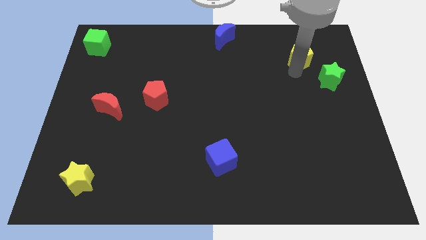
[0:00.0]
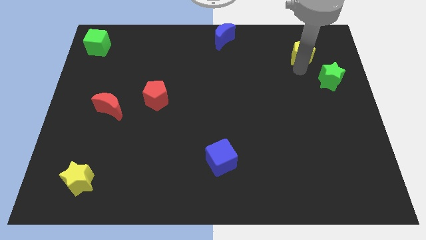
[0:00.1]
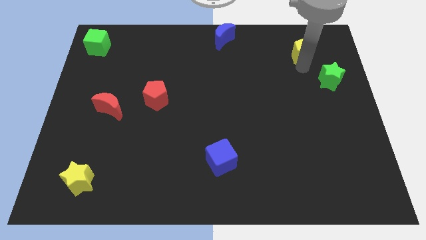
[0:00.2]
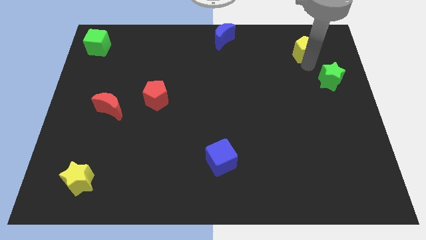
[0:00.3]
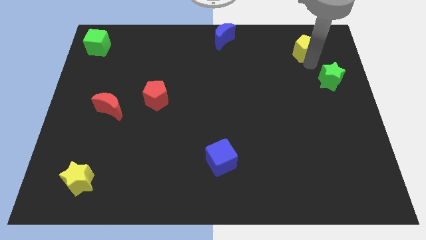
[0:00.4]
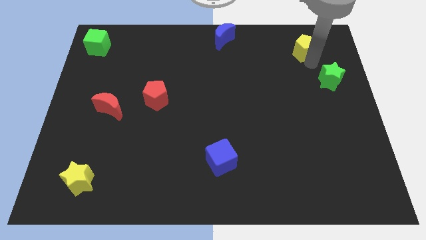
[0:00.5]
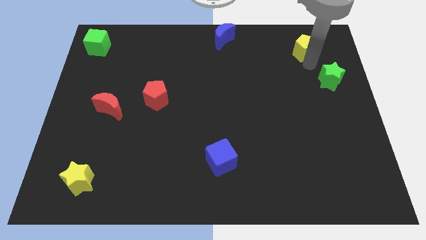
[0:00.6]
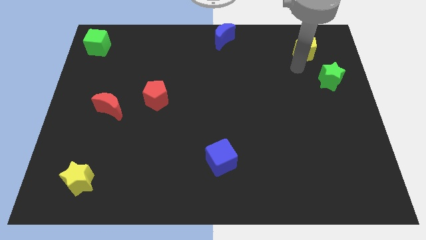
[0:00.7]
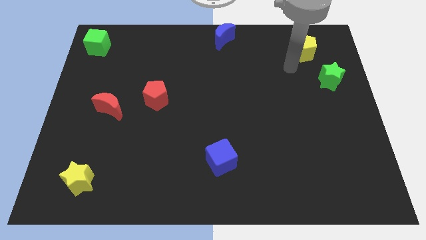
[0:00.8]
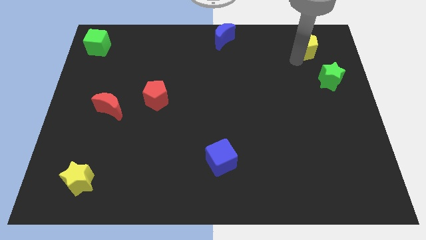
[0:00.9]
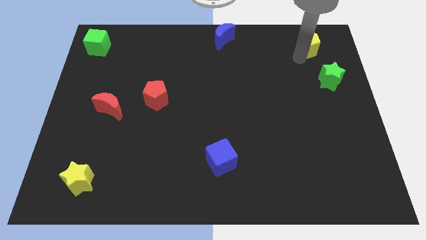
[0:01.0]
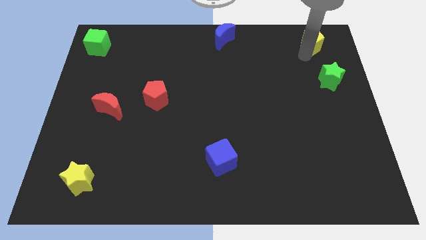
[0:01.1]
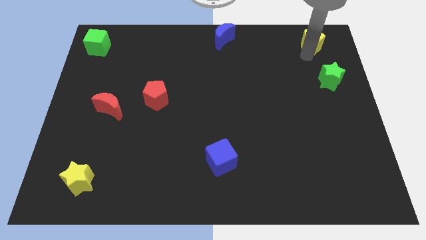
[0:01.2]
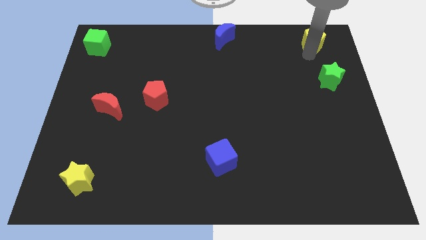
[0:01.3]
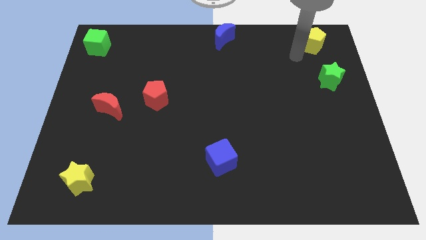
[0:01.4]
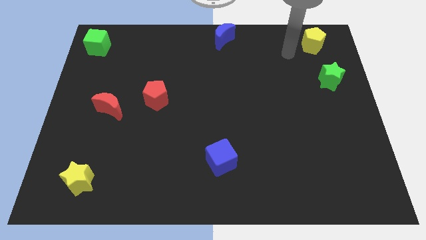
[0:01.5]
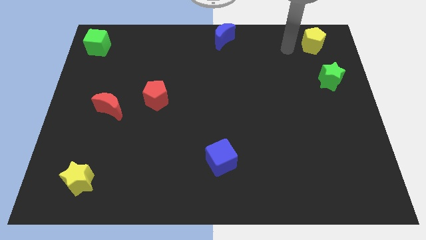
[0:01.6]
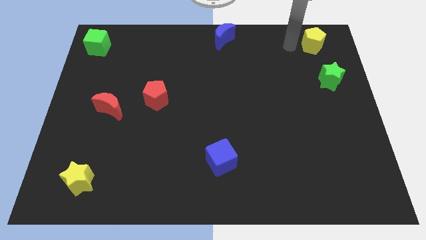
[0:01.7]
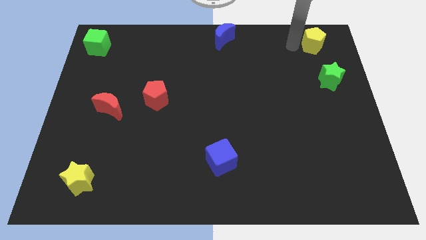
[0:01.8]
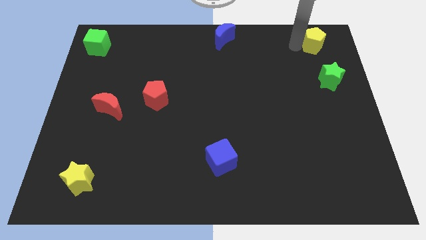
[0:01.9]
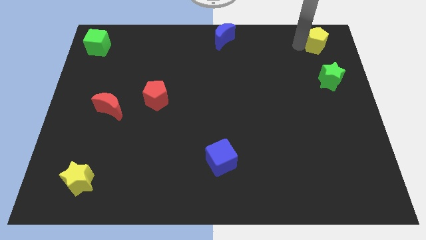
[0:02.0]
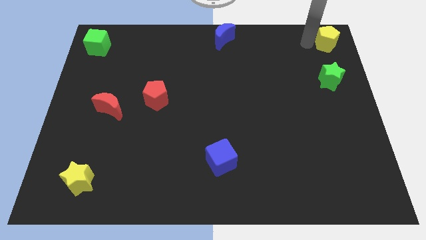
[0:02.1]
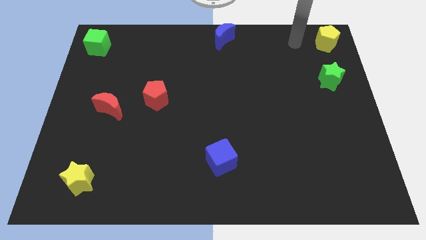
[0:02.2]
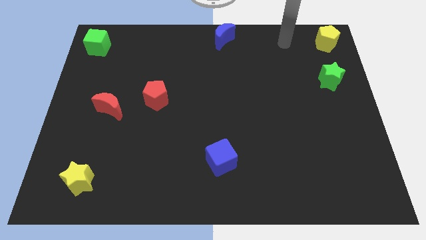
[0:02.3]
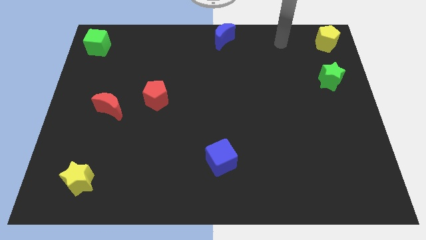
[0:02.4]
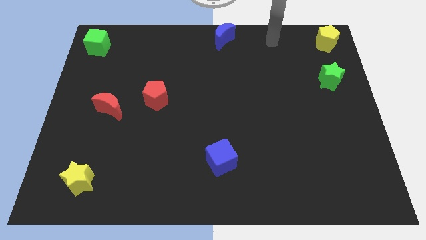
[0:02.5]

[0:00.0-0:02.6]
push yellow pentagon to the top right corner of the board

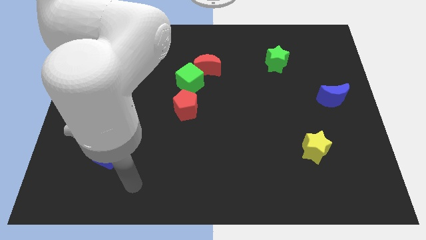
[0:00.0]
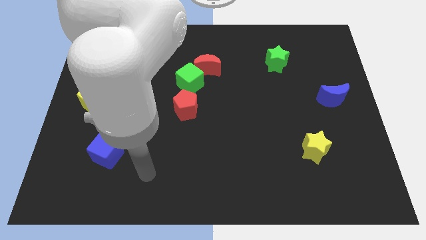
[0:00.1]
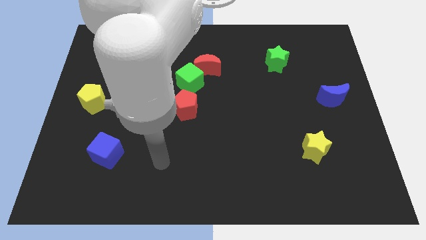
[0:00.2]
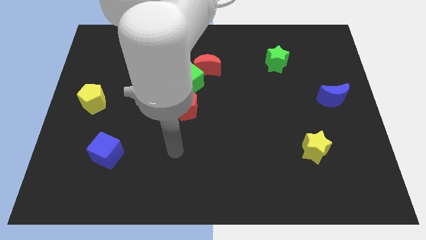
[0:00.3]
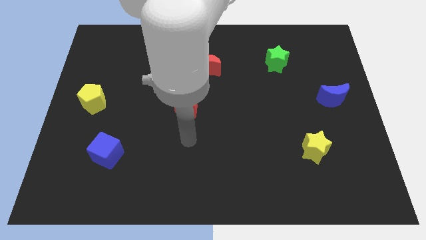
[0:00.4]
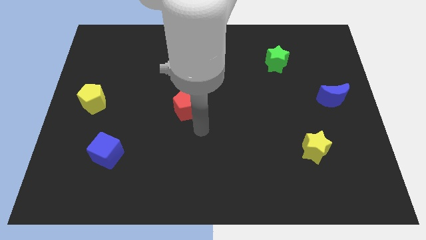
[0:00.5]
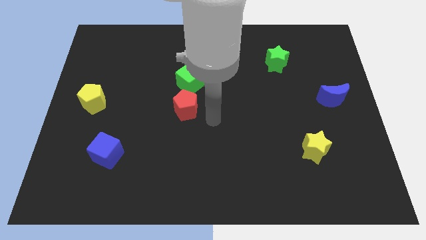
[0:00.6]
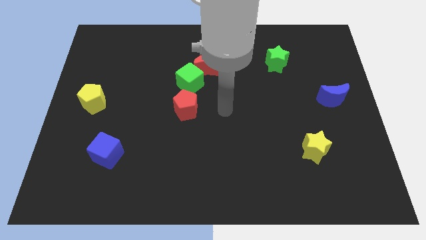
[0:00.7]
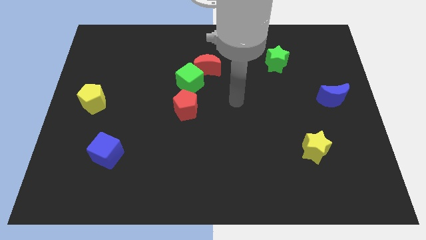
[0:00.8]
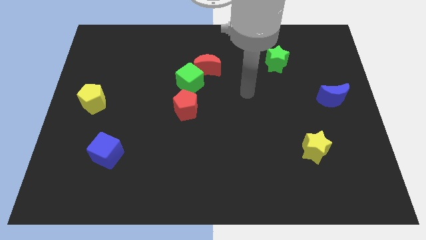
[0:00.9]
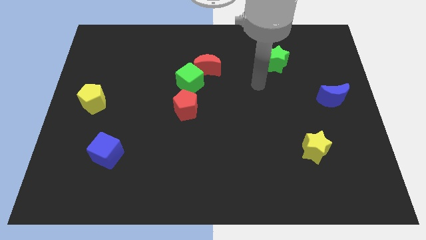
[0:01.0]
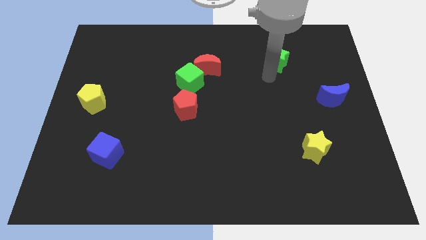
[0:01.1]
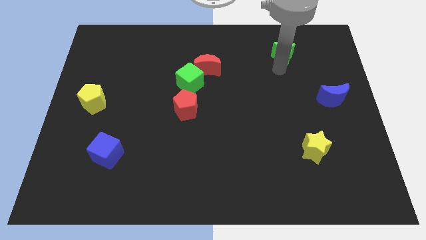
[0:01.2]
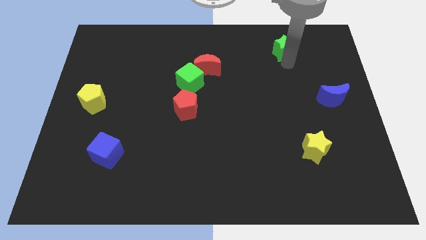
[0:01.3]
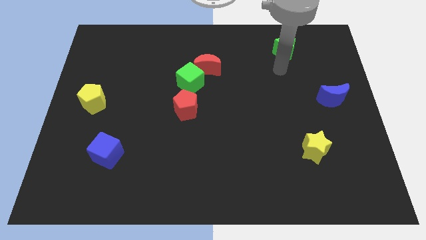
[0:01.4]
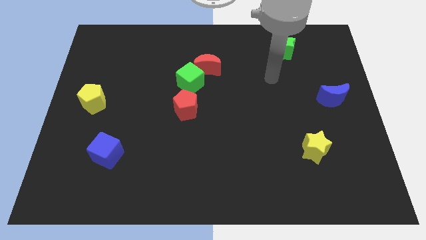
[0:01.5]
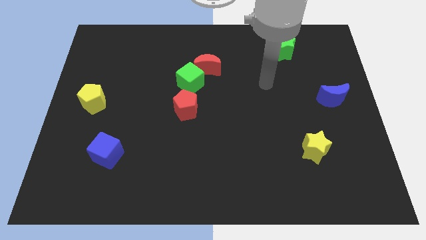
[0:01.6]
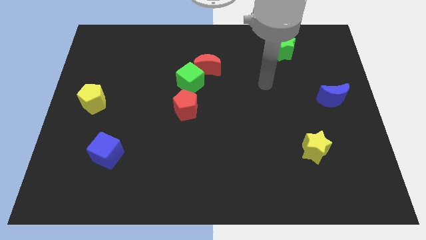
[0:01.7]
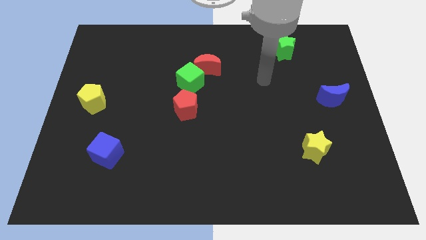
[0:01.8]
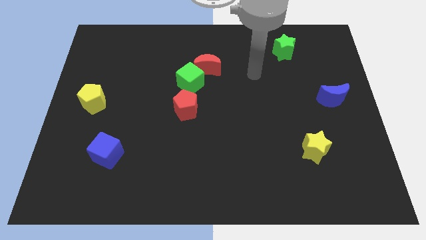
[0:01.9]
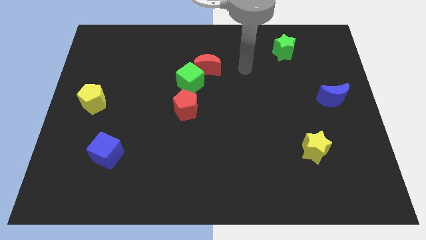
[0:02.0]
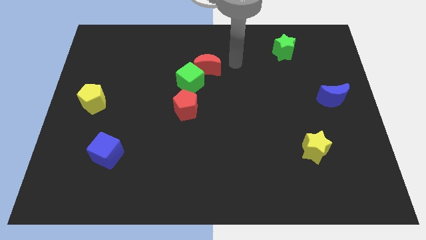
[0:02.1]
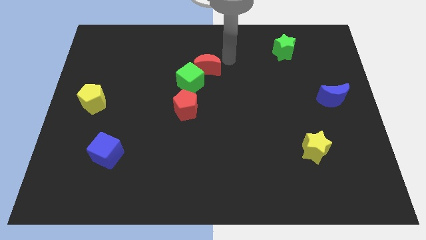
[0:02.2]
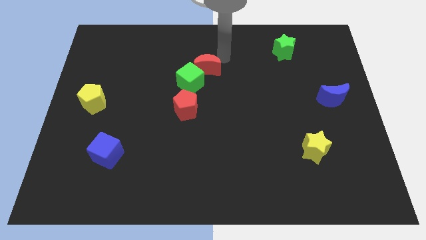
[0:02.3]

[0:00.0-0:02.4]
move the green star to the top right

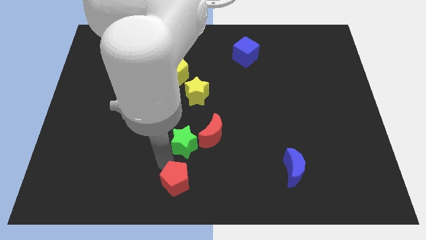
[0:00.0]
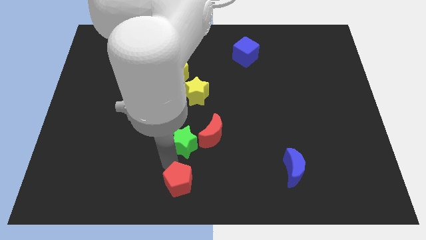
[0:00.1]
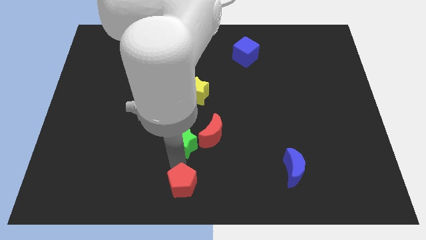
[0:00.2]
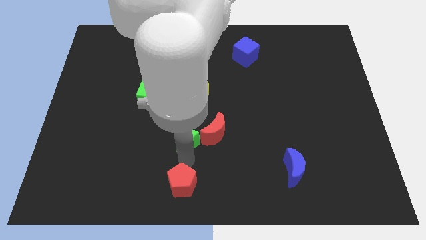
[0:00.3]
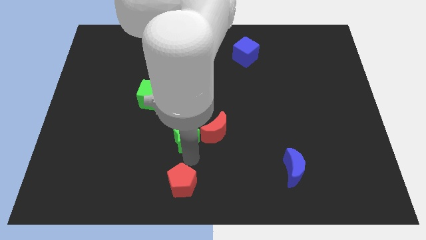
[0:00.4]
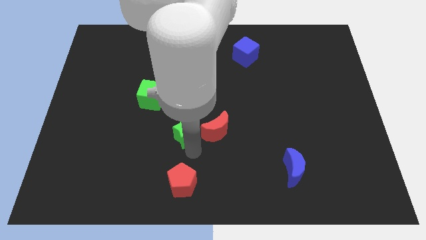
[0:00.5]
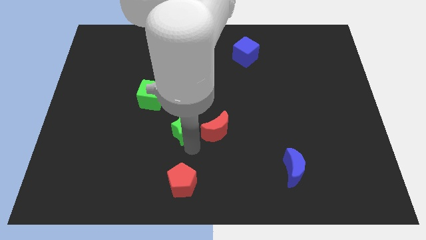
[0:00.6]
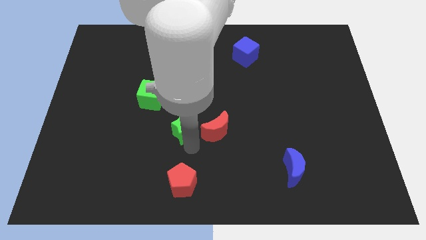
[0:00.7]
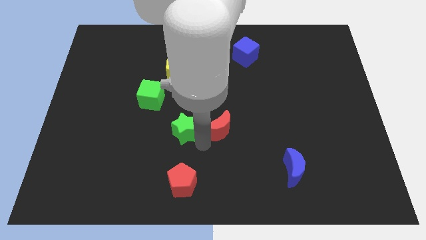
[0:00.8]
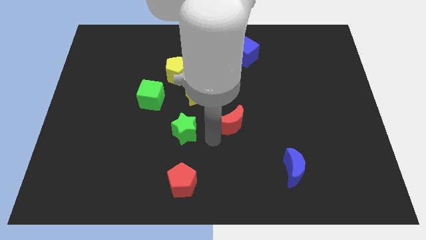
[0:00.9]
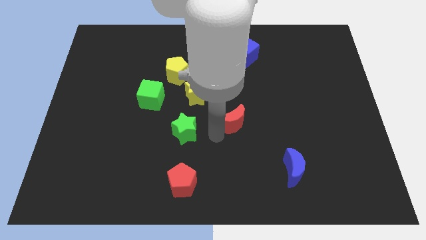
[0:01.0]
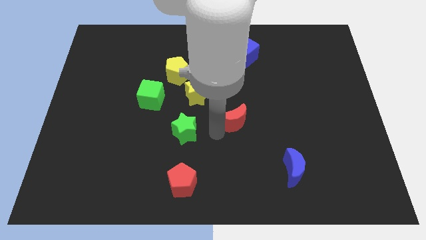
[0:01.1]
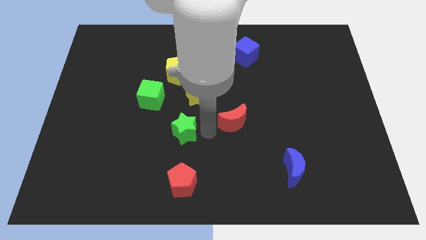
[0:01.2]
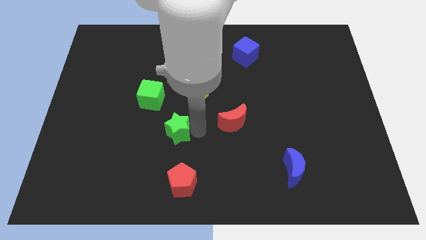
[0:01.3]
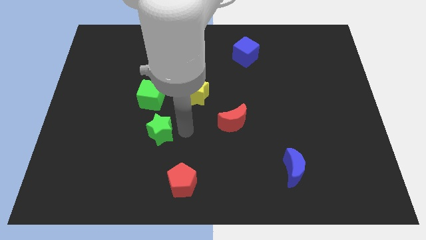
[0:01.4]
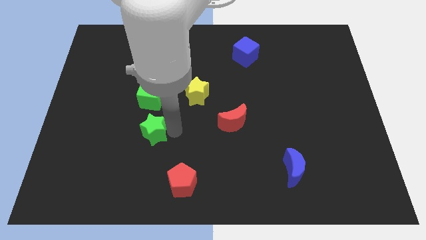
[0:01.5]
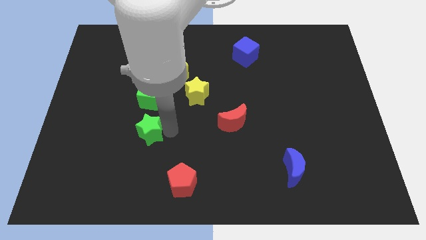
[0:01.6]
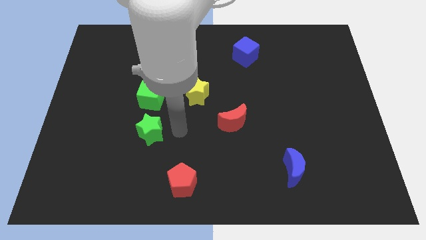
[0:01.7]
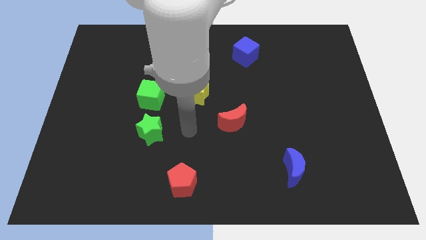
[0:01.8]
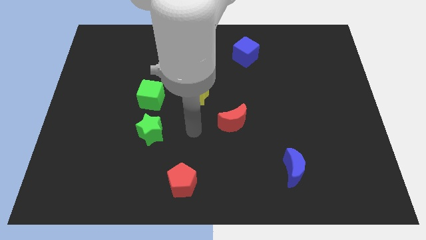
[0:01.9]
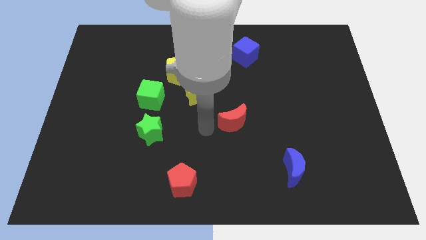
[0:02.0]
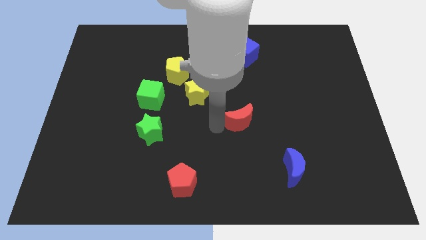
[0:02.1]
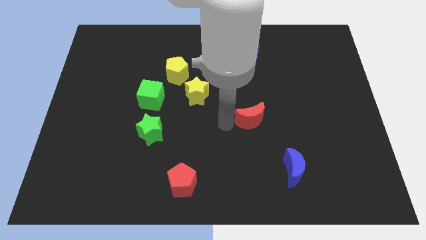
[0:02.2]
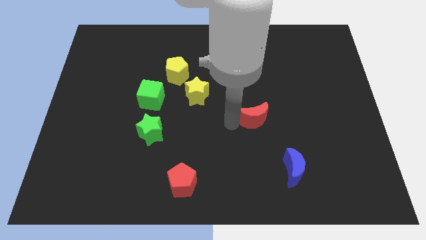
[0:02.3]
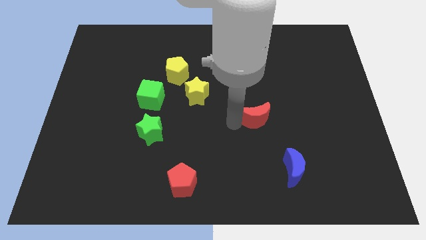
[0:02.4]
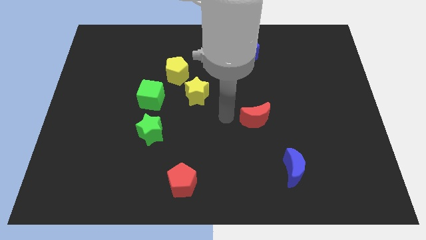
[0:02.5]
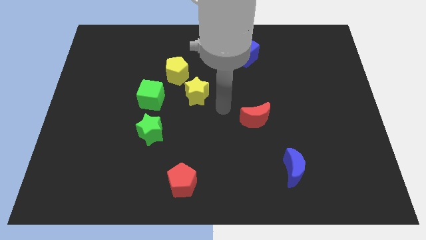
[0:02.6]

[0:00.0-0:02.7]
move green star below green cube

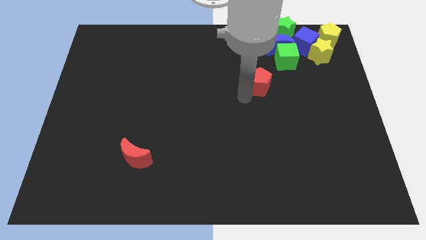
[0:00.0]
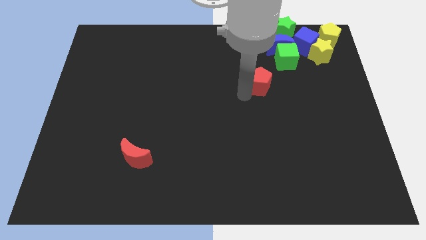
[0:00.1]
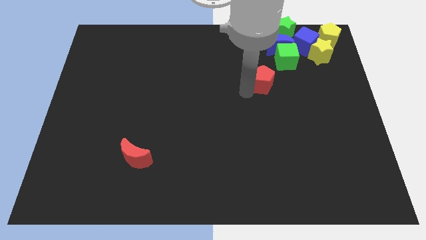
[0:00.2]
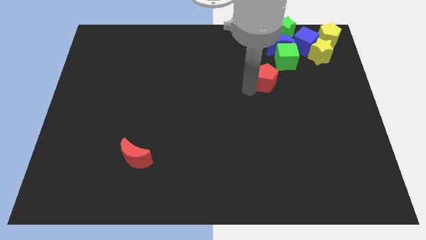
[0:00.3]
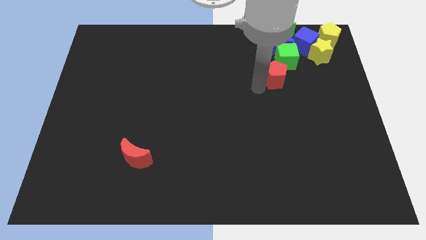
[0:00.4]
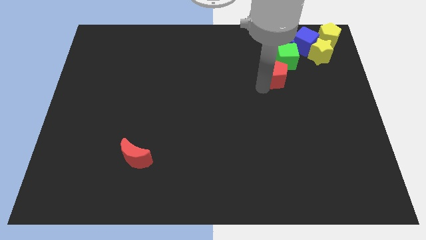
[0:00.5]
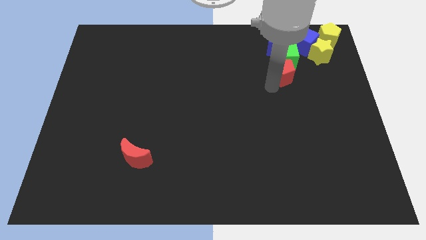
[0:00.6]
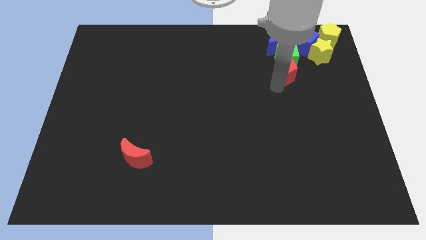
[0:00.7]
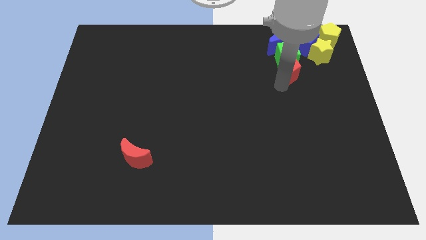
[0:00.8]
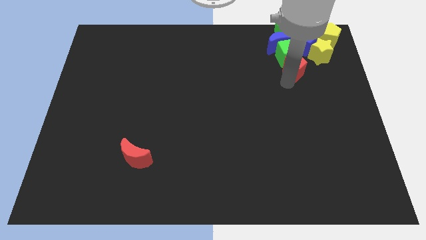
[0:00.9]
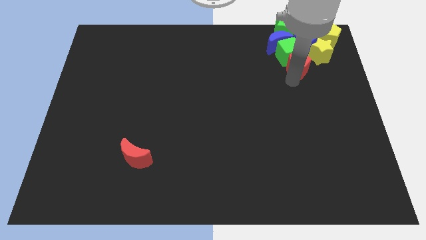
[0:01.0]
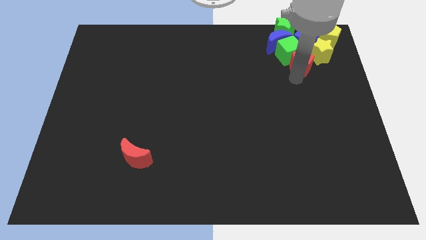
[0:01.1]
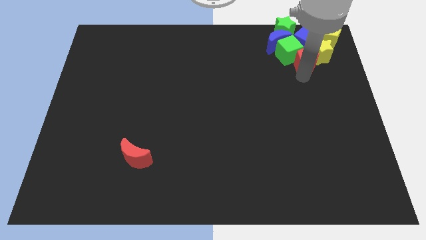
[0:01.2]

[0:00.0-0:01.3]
push the red pentagon to the group of blocks
